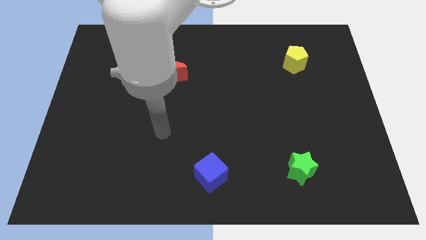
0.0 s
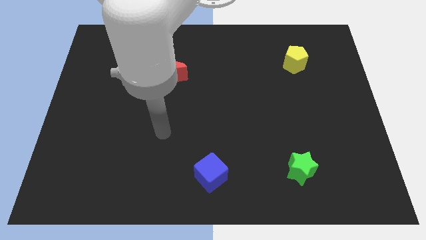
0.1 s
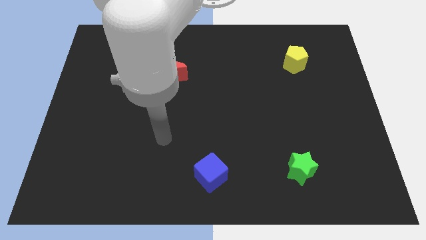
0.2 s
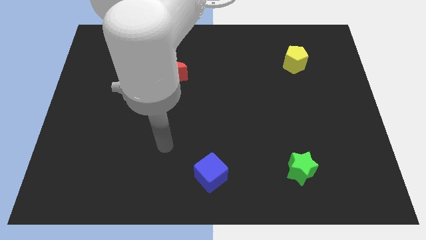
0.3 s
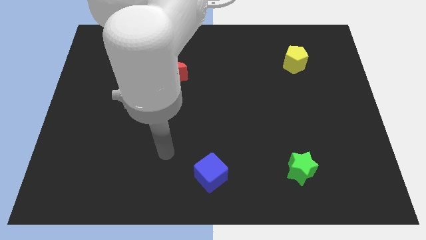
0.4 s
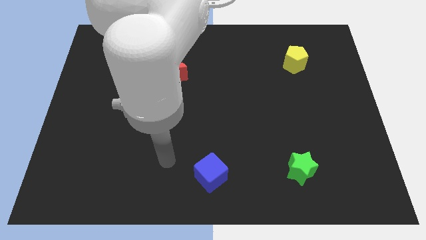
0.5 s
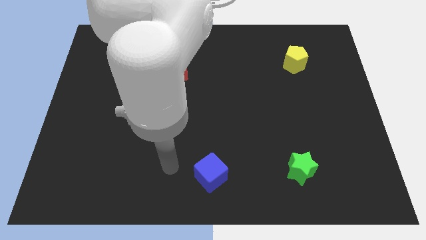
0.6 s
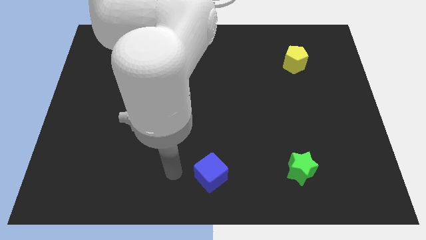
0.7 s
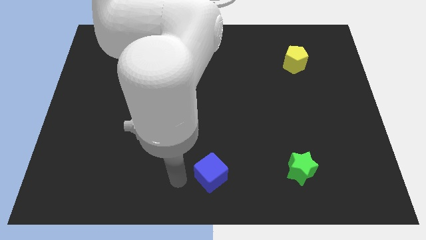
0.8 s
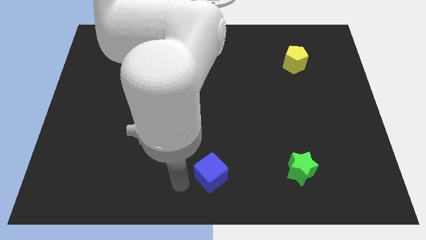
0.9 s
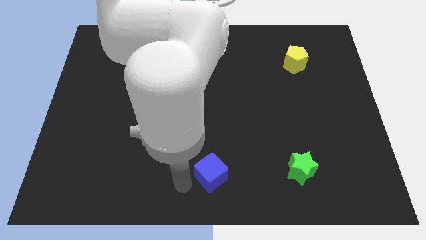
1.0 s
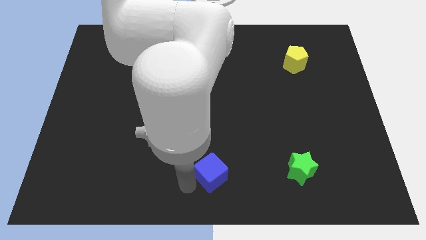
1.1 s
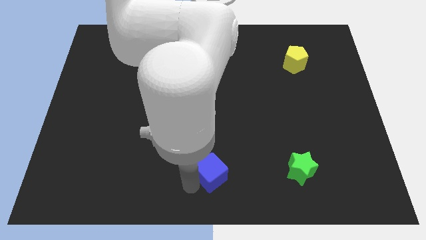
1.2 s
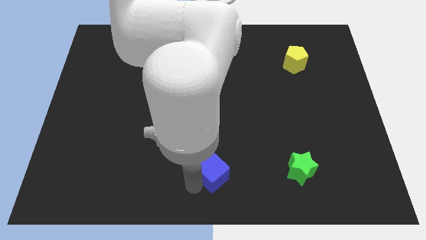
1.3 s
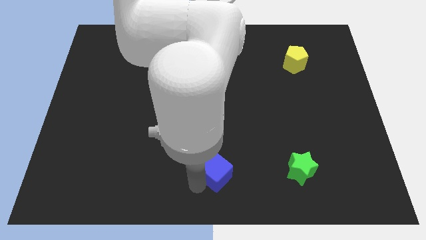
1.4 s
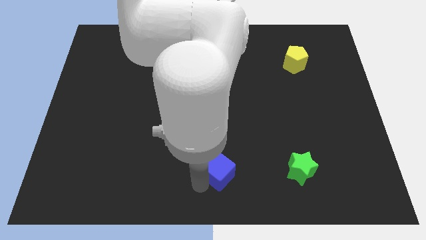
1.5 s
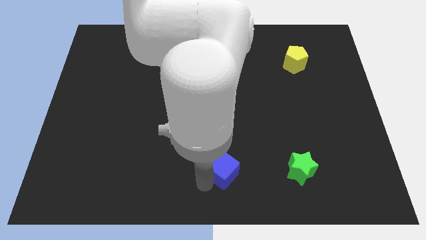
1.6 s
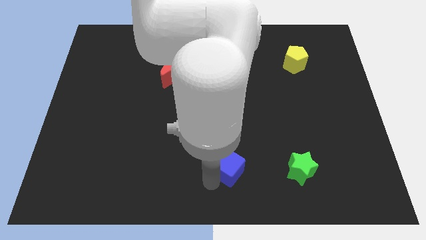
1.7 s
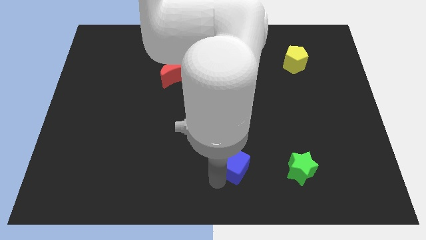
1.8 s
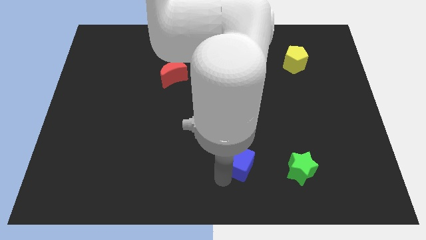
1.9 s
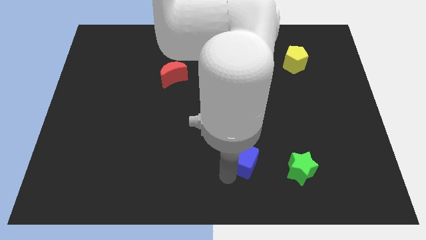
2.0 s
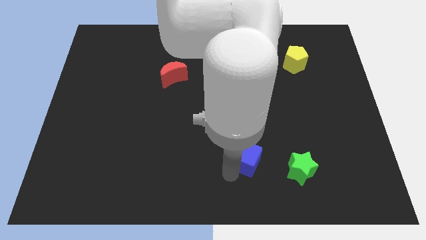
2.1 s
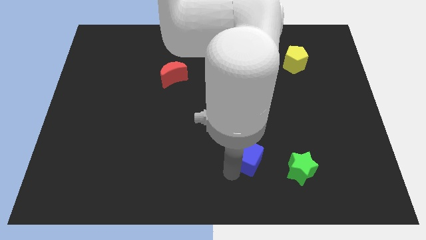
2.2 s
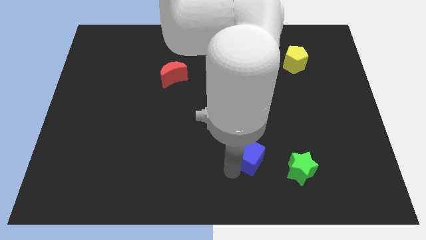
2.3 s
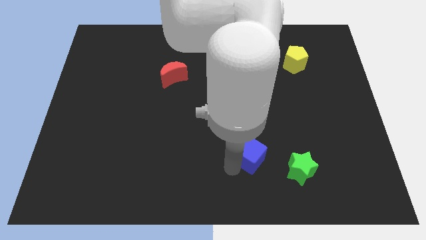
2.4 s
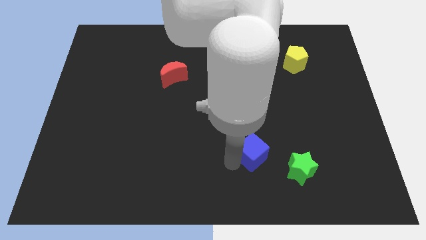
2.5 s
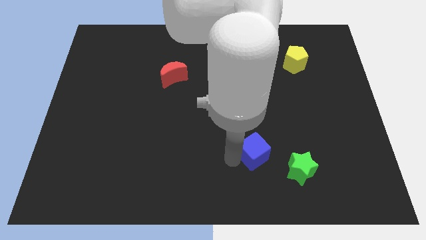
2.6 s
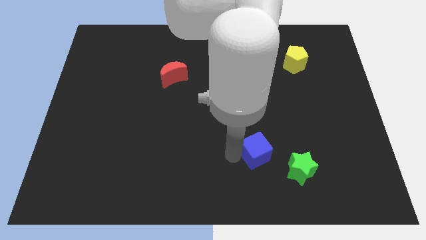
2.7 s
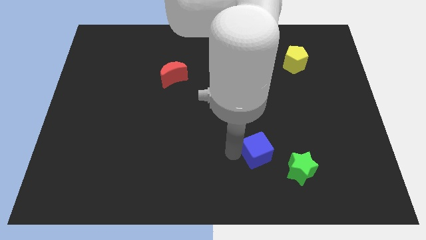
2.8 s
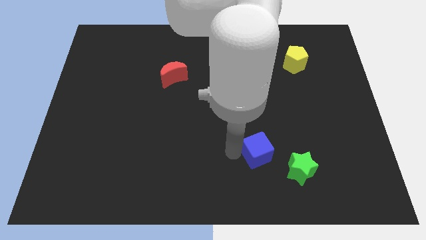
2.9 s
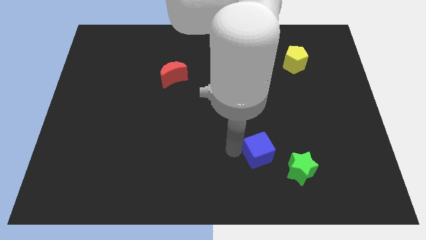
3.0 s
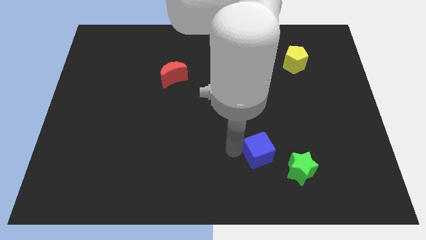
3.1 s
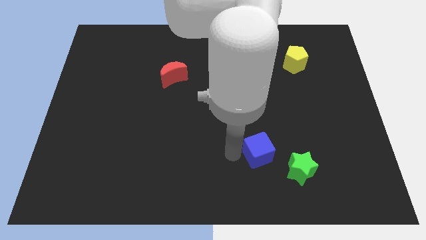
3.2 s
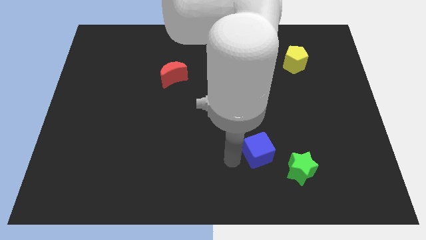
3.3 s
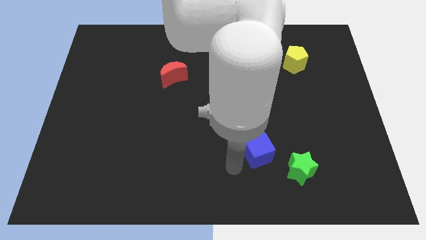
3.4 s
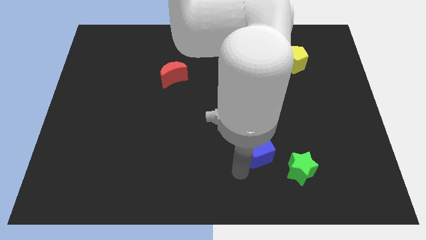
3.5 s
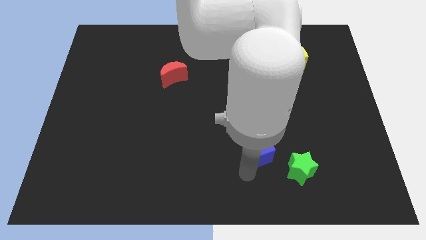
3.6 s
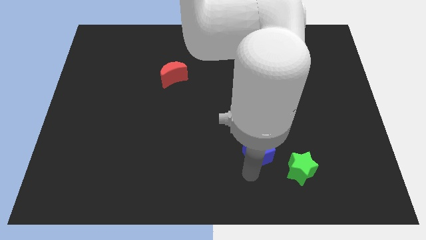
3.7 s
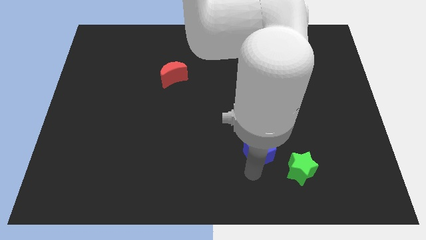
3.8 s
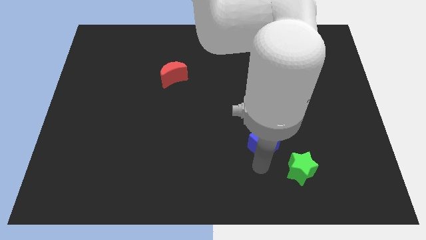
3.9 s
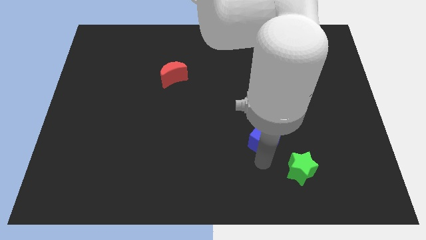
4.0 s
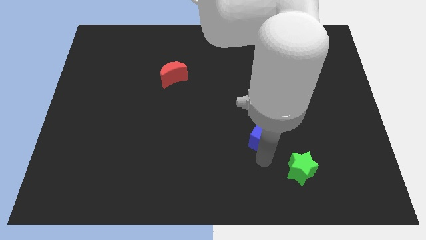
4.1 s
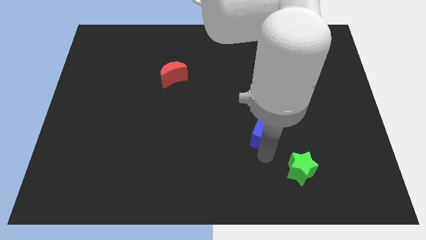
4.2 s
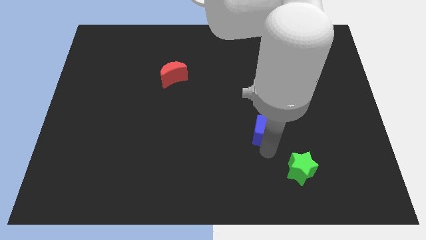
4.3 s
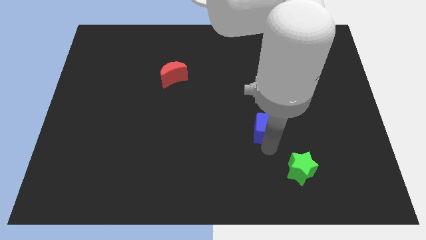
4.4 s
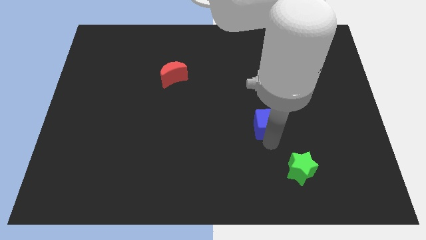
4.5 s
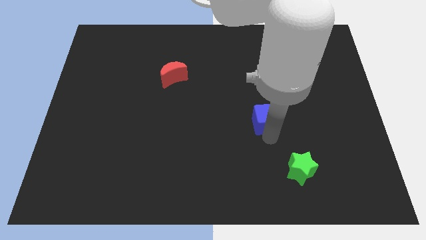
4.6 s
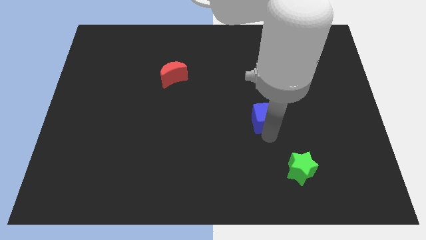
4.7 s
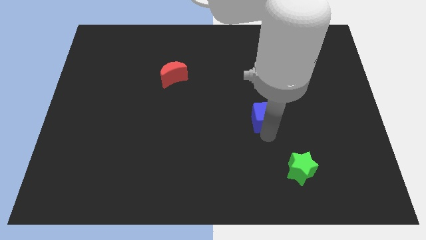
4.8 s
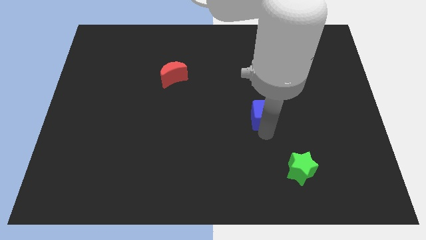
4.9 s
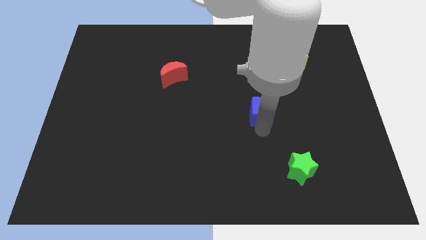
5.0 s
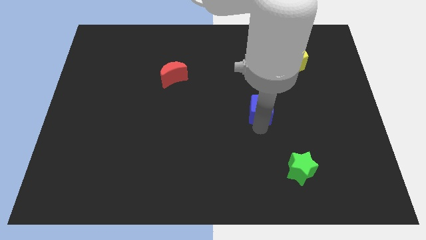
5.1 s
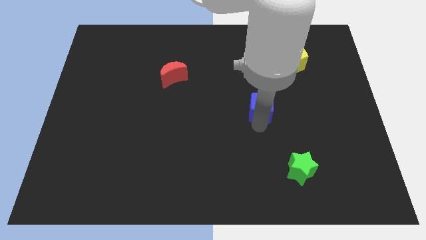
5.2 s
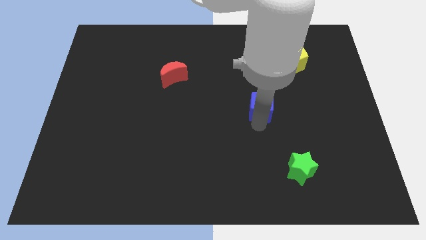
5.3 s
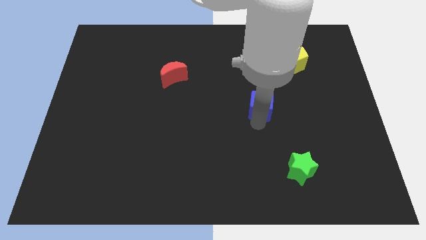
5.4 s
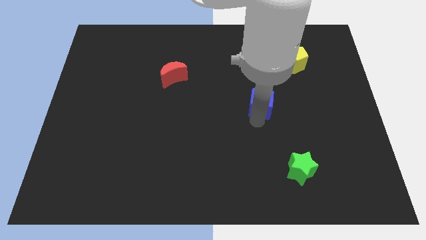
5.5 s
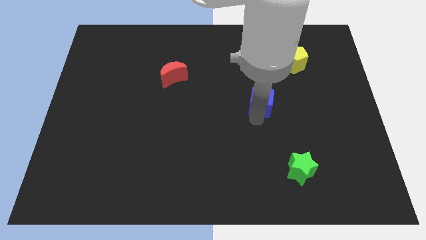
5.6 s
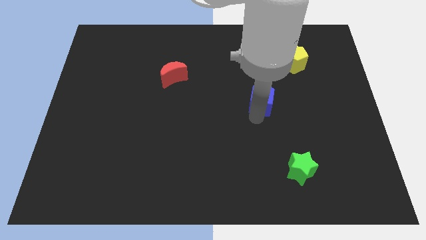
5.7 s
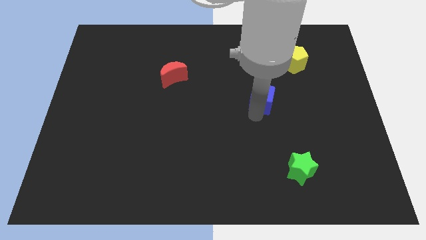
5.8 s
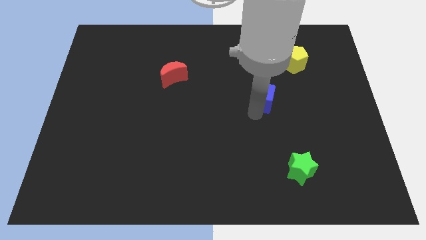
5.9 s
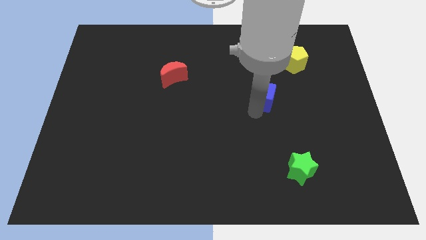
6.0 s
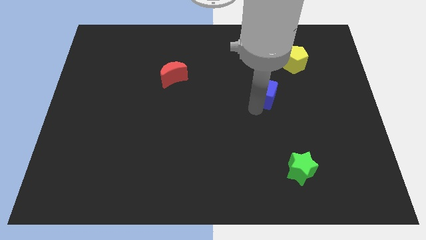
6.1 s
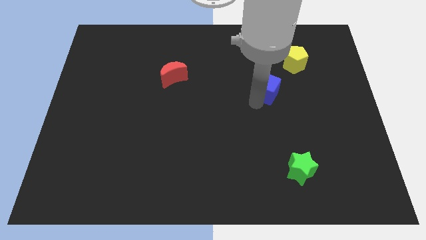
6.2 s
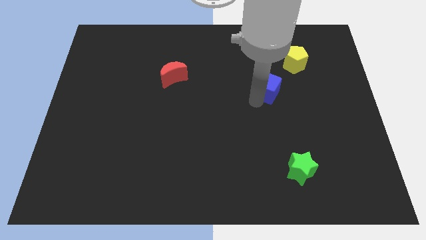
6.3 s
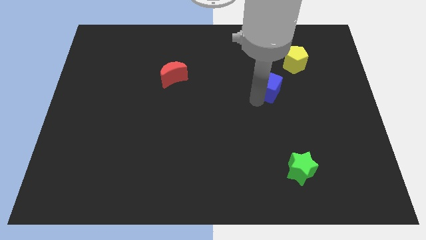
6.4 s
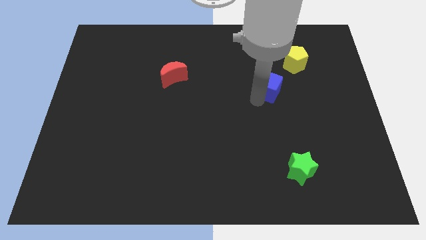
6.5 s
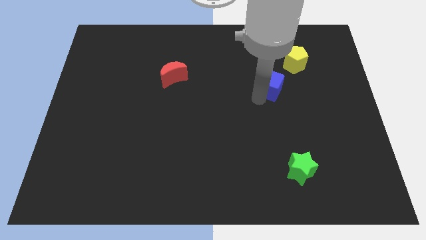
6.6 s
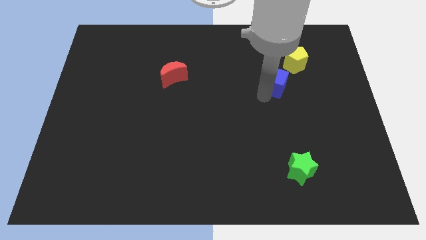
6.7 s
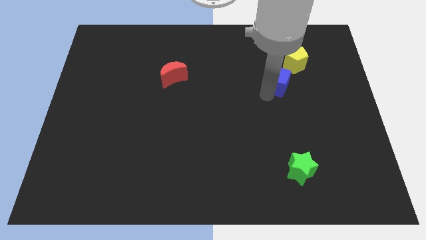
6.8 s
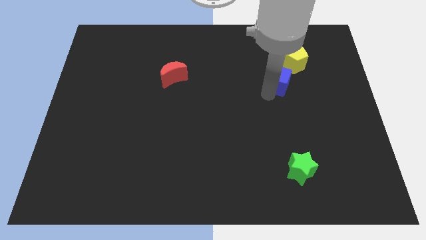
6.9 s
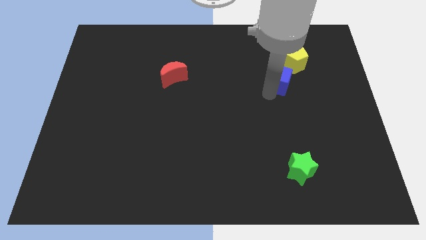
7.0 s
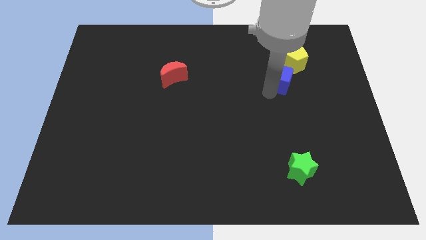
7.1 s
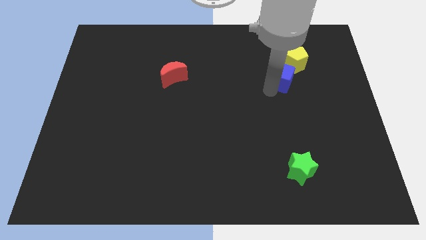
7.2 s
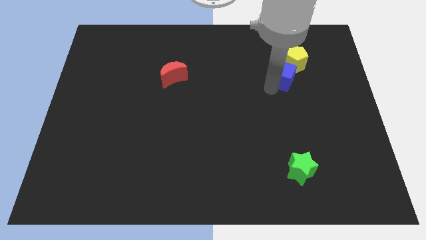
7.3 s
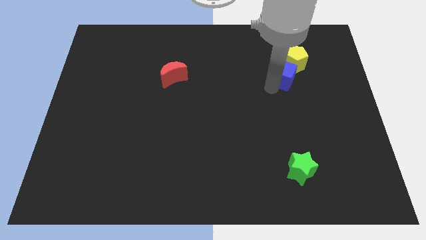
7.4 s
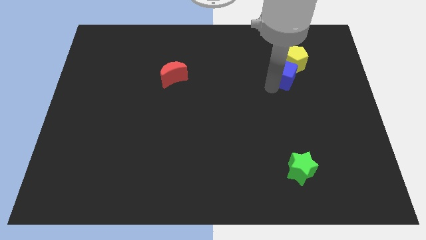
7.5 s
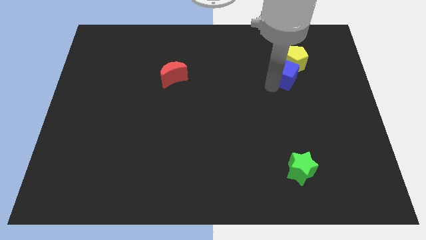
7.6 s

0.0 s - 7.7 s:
slide the blue block next to the yellow block

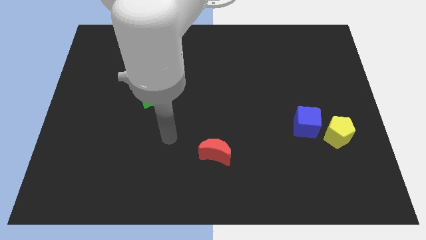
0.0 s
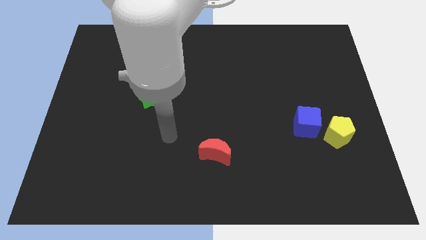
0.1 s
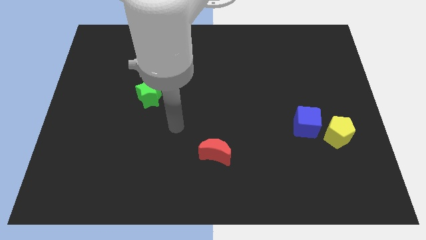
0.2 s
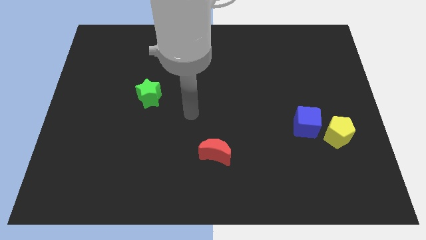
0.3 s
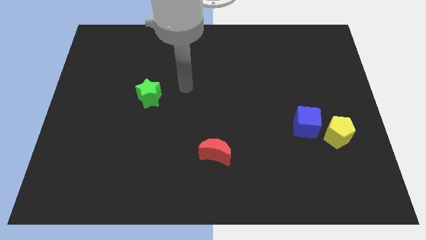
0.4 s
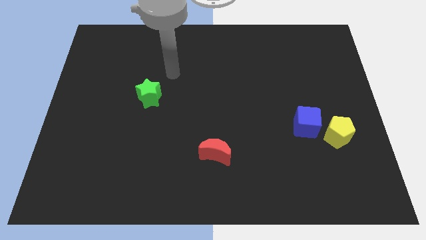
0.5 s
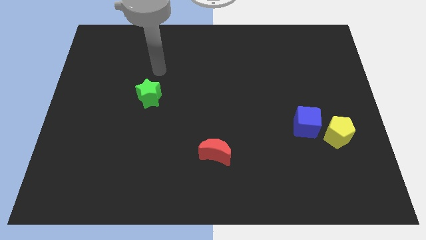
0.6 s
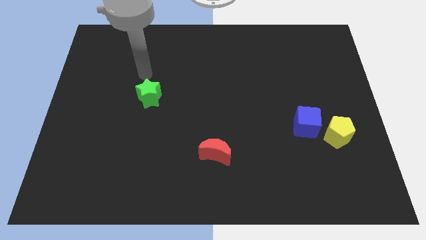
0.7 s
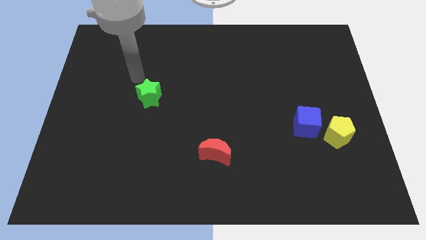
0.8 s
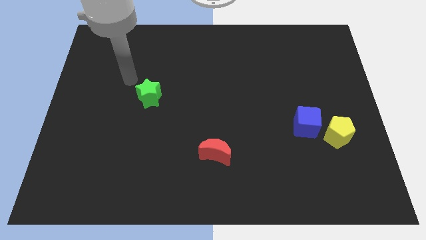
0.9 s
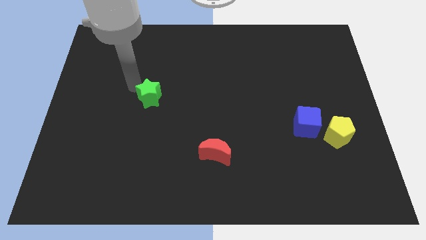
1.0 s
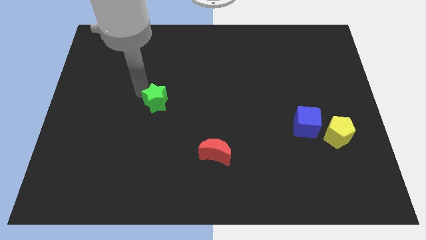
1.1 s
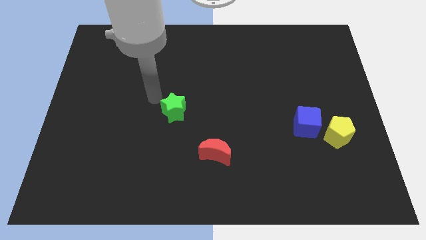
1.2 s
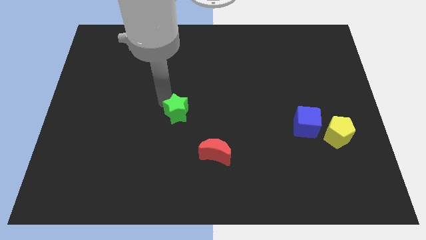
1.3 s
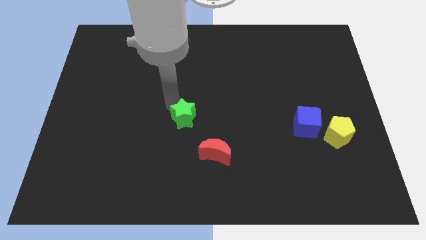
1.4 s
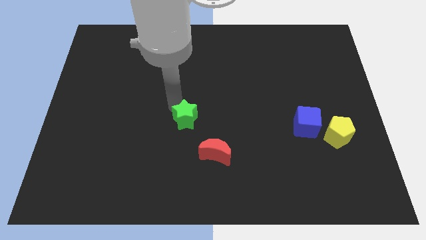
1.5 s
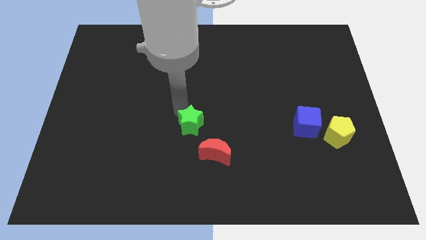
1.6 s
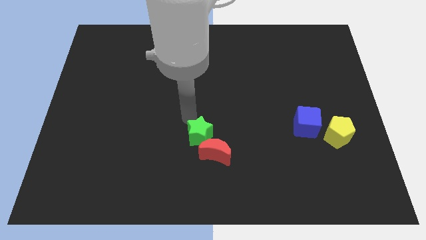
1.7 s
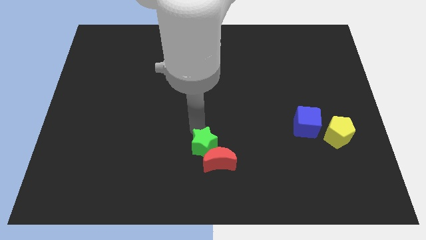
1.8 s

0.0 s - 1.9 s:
put the green star close to the moon
